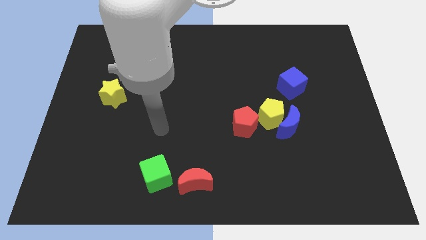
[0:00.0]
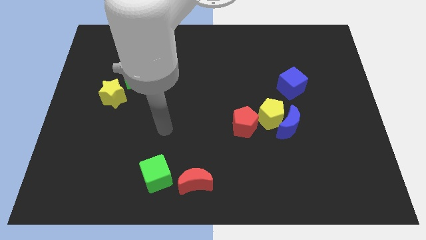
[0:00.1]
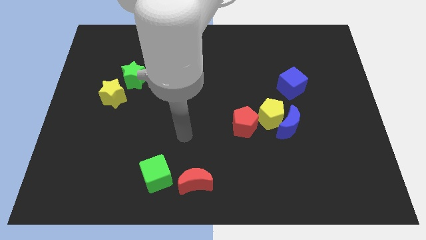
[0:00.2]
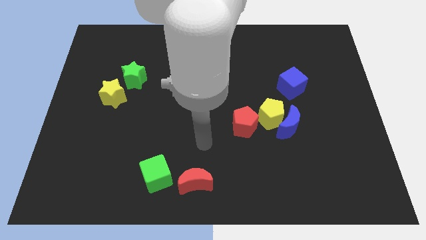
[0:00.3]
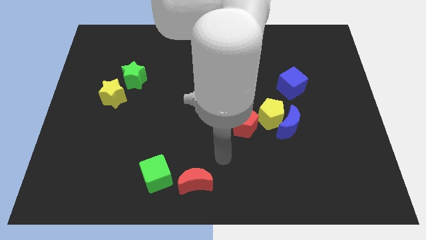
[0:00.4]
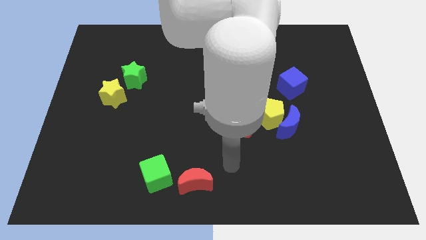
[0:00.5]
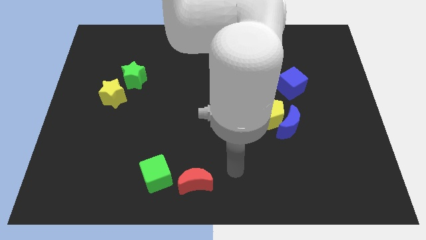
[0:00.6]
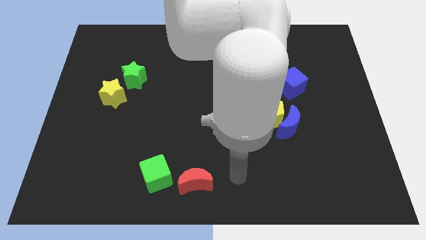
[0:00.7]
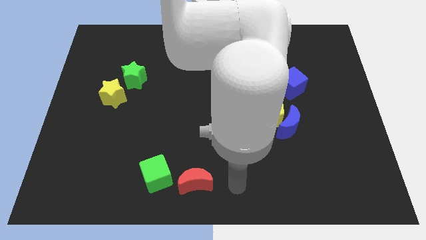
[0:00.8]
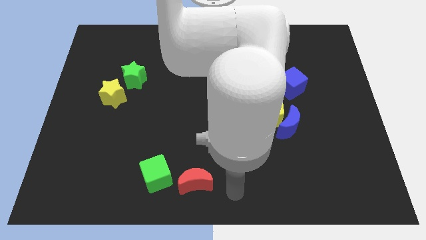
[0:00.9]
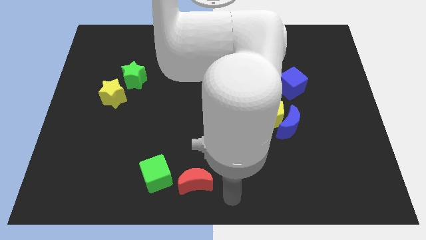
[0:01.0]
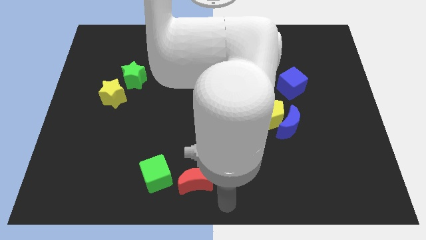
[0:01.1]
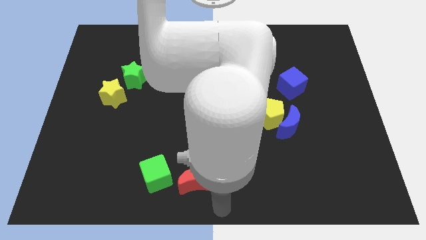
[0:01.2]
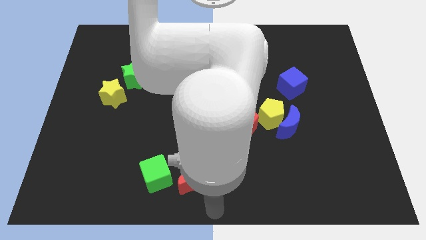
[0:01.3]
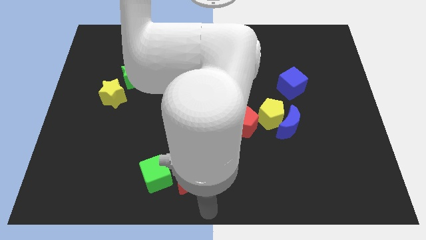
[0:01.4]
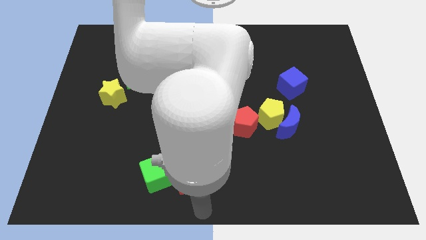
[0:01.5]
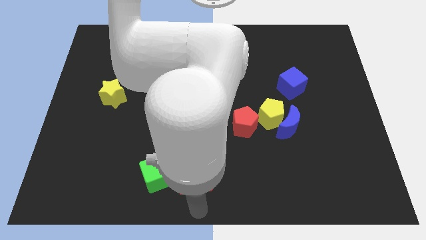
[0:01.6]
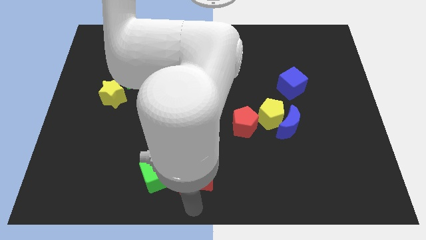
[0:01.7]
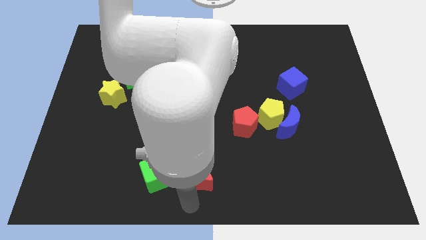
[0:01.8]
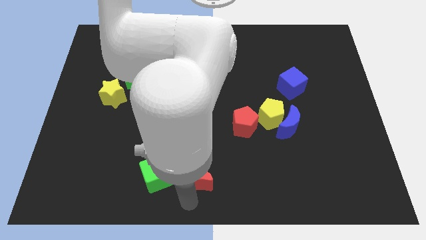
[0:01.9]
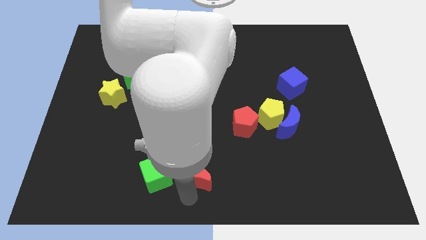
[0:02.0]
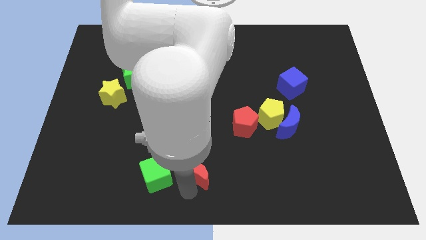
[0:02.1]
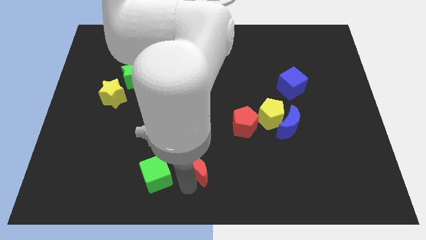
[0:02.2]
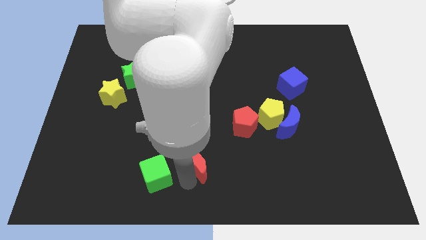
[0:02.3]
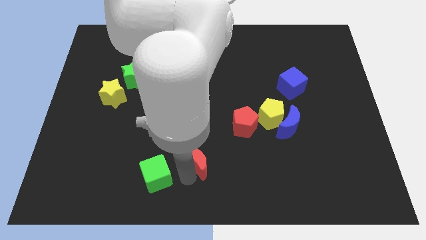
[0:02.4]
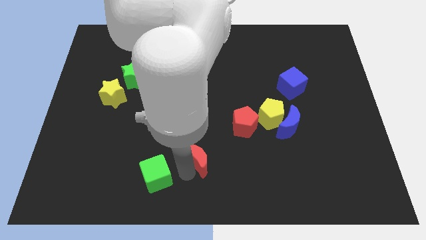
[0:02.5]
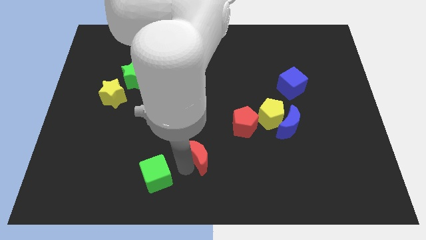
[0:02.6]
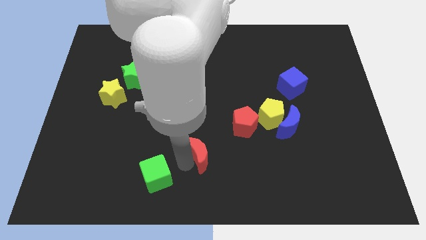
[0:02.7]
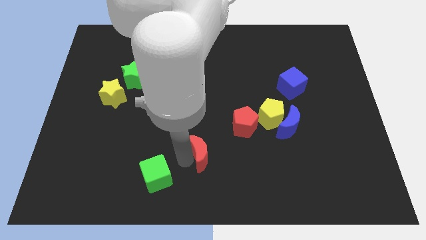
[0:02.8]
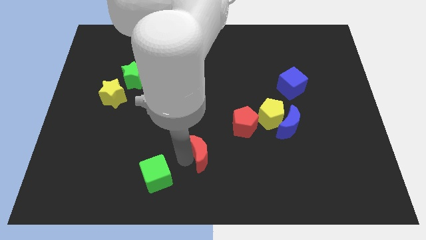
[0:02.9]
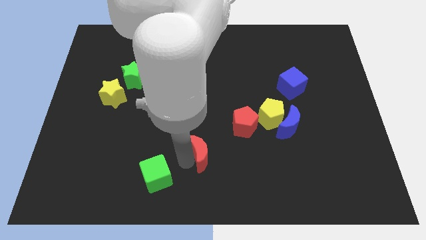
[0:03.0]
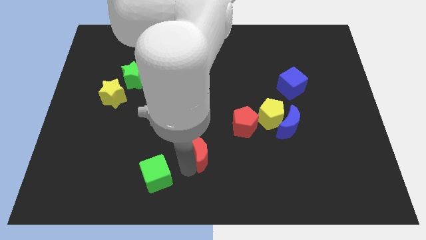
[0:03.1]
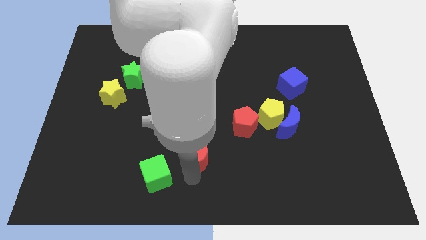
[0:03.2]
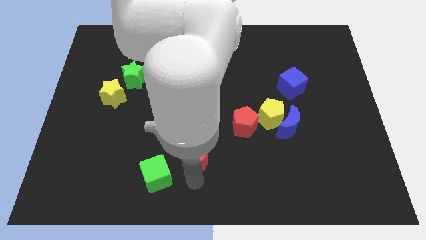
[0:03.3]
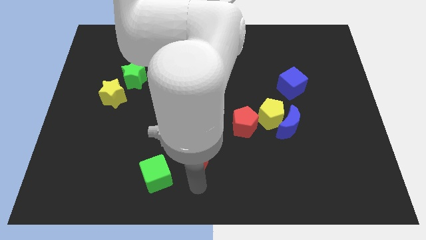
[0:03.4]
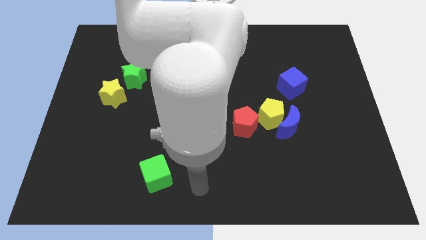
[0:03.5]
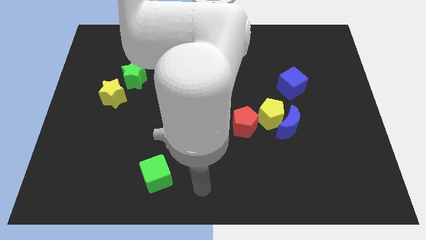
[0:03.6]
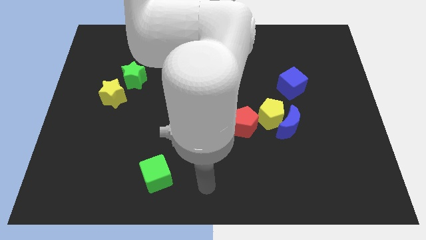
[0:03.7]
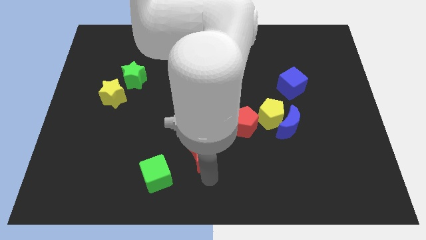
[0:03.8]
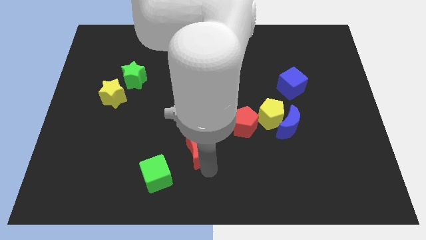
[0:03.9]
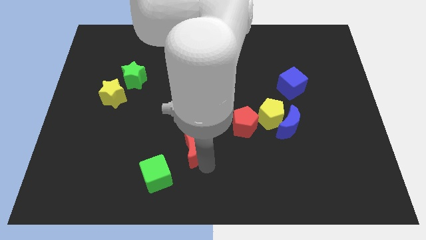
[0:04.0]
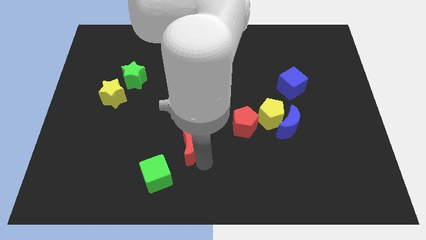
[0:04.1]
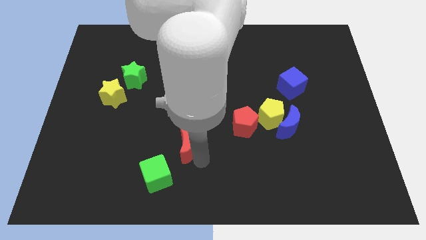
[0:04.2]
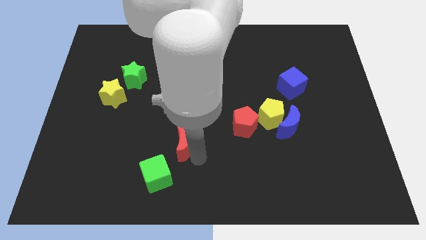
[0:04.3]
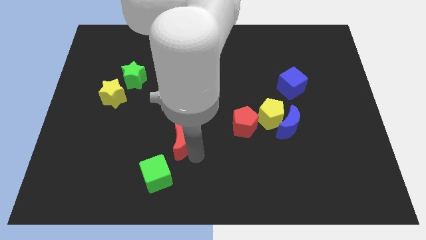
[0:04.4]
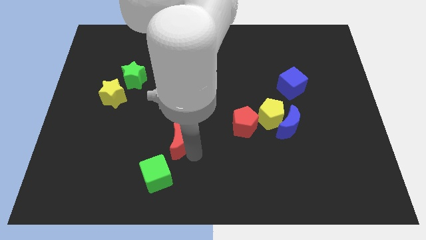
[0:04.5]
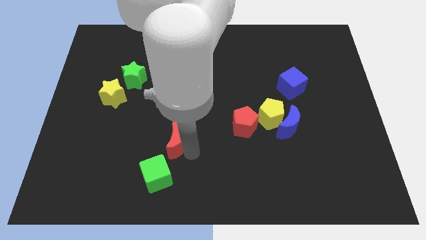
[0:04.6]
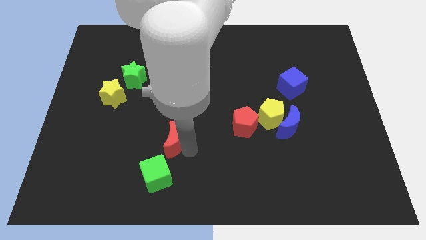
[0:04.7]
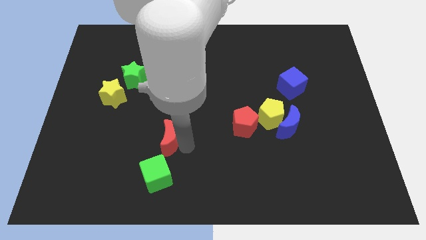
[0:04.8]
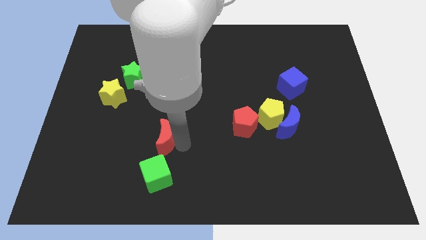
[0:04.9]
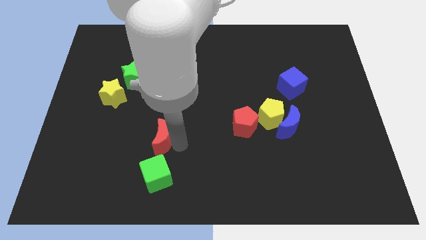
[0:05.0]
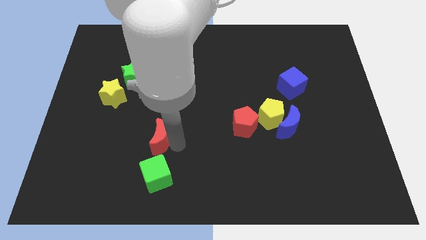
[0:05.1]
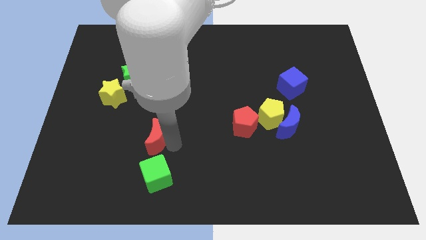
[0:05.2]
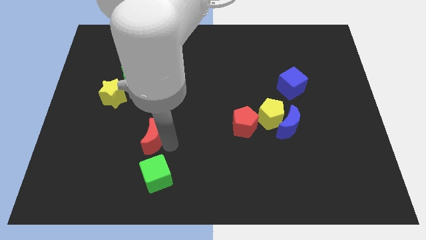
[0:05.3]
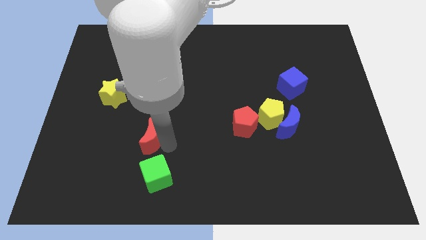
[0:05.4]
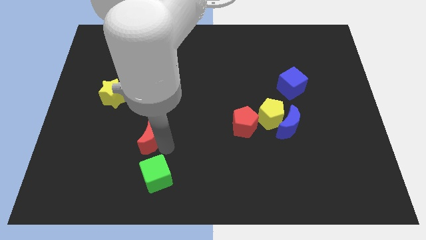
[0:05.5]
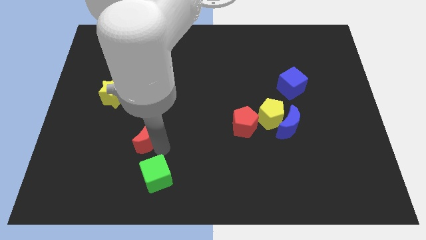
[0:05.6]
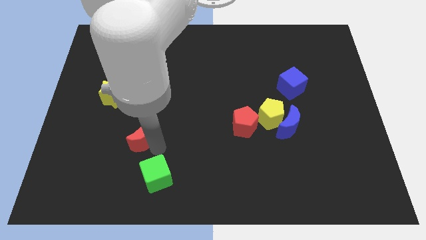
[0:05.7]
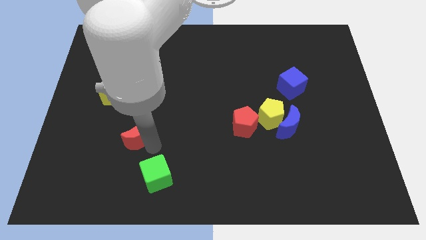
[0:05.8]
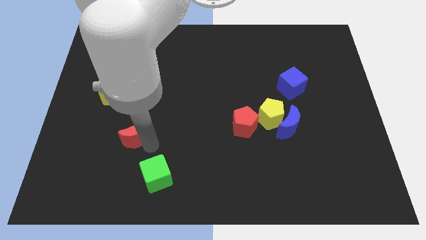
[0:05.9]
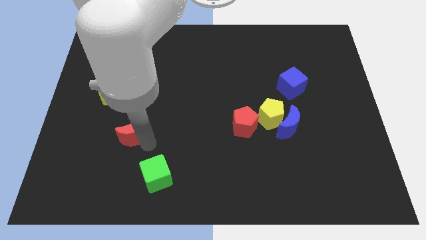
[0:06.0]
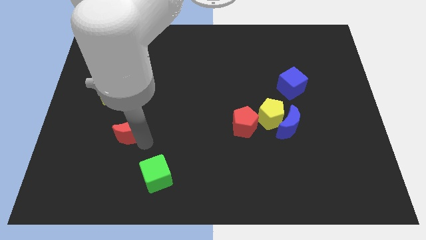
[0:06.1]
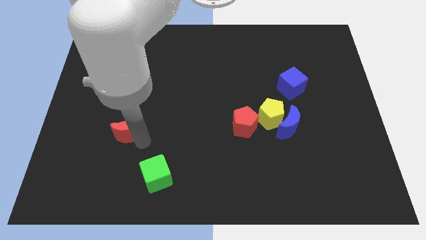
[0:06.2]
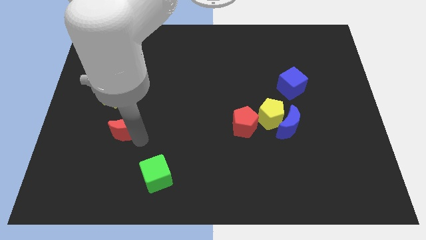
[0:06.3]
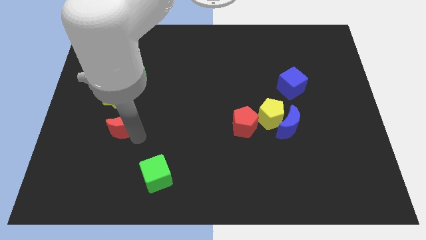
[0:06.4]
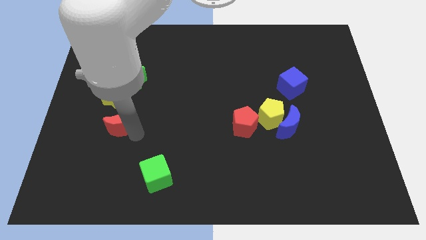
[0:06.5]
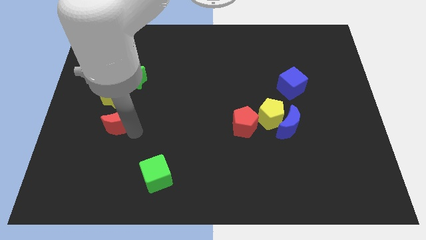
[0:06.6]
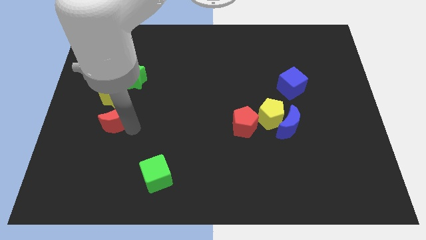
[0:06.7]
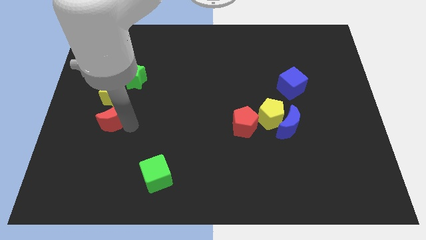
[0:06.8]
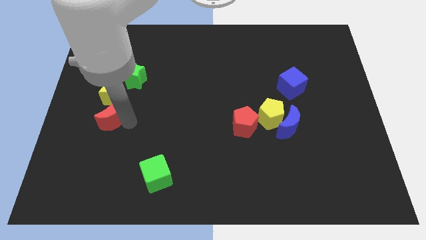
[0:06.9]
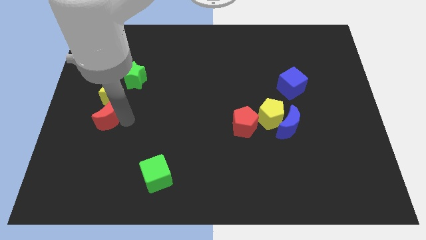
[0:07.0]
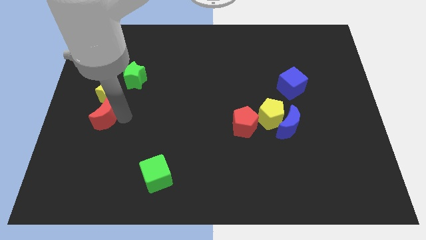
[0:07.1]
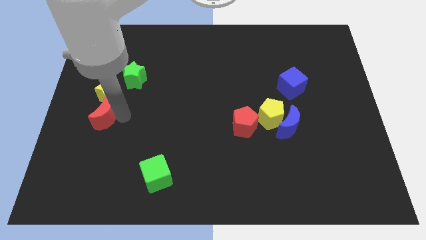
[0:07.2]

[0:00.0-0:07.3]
move the red moon to the yellow star

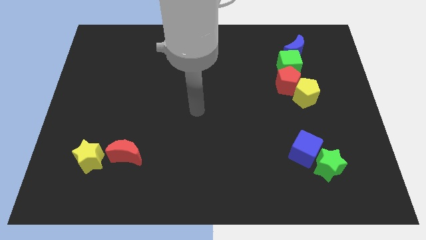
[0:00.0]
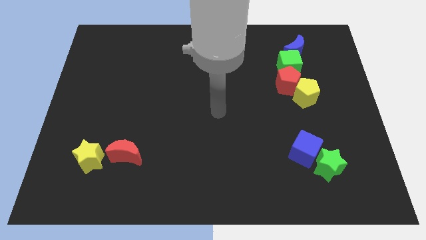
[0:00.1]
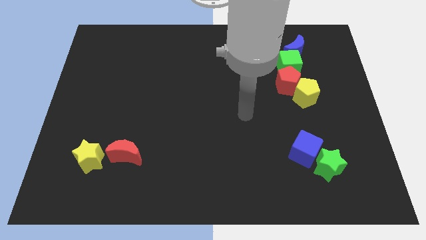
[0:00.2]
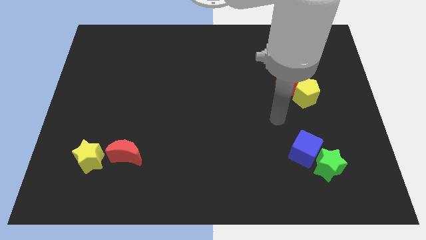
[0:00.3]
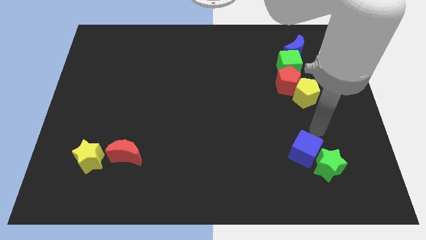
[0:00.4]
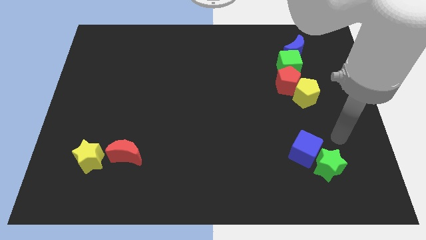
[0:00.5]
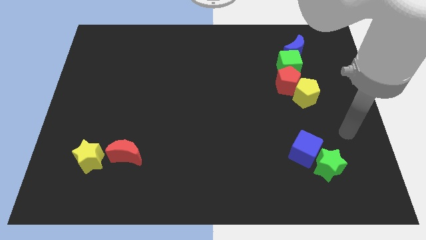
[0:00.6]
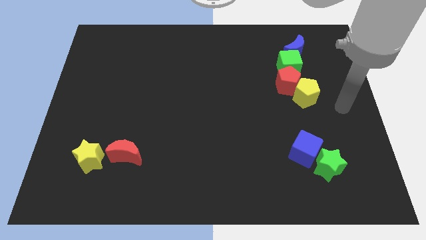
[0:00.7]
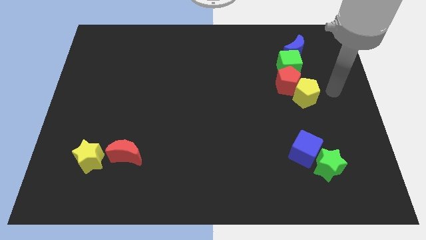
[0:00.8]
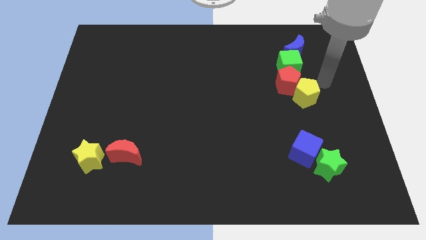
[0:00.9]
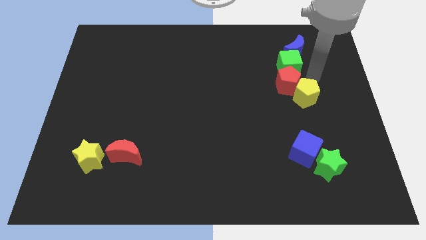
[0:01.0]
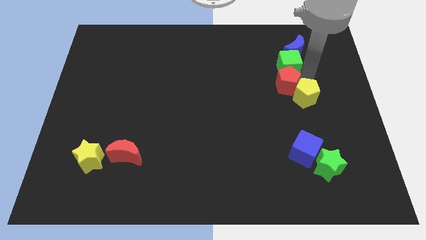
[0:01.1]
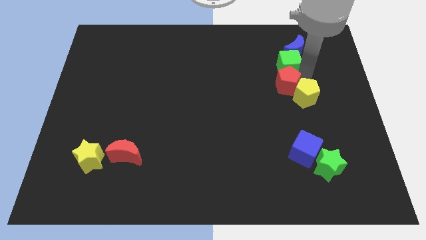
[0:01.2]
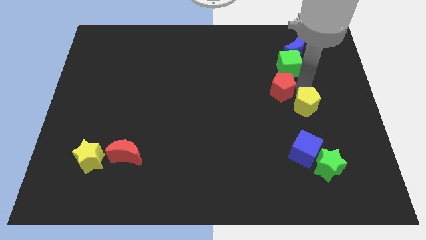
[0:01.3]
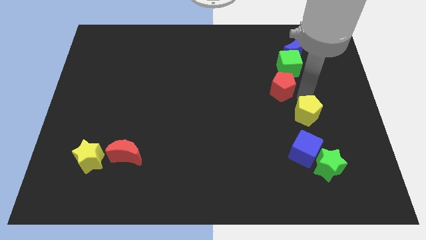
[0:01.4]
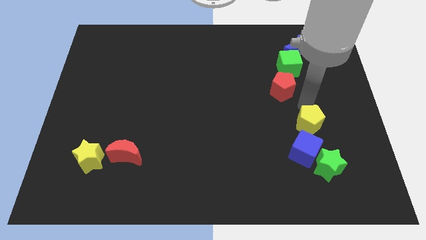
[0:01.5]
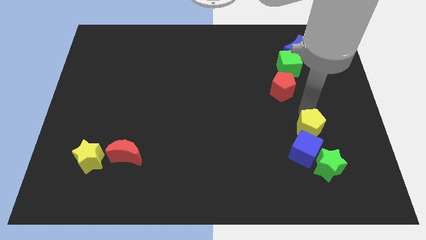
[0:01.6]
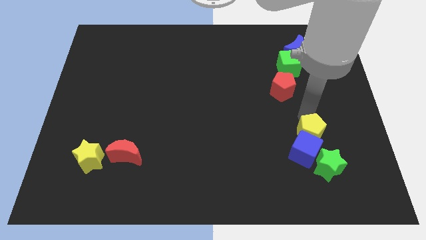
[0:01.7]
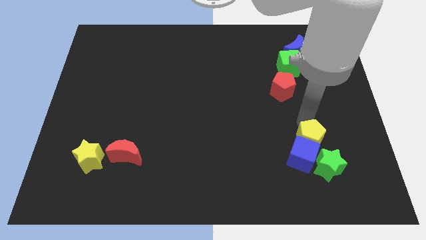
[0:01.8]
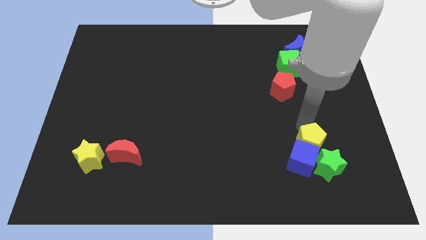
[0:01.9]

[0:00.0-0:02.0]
push the yellow pentagon next to the blue cube
